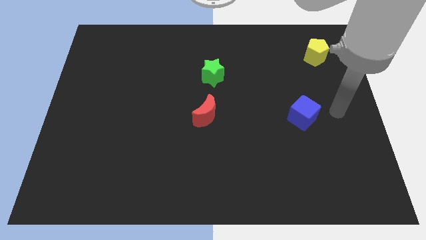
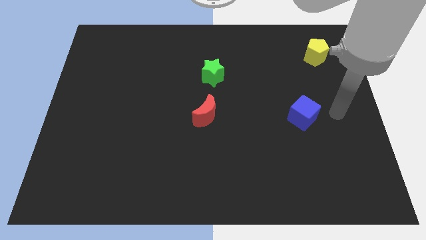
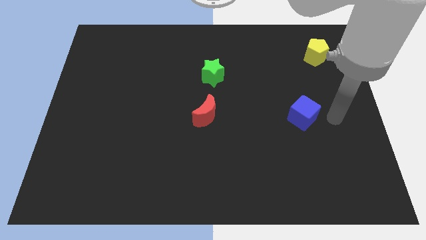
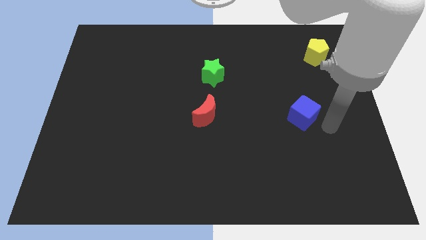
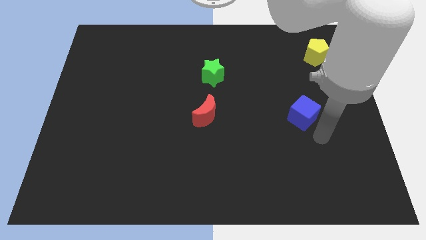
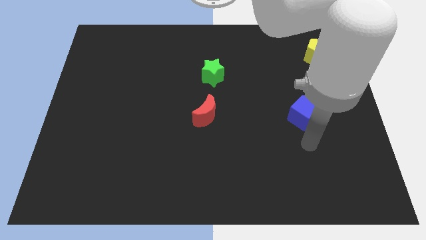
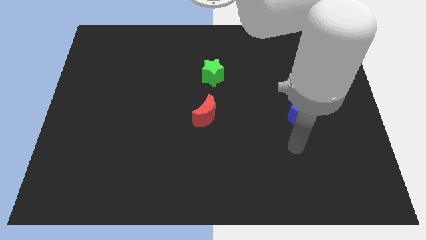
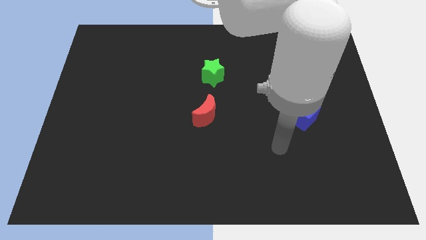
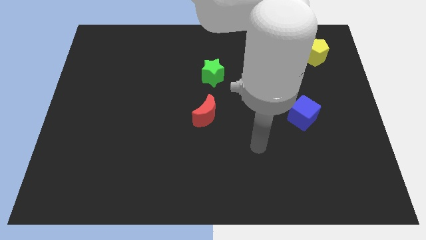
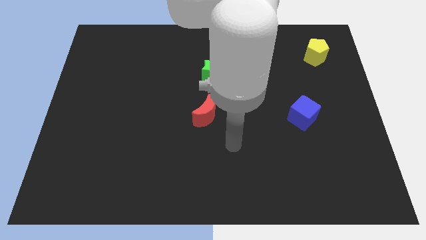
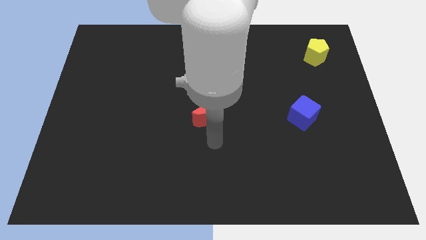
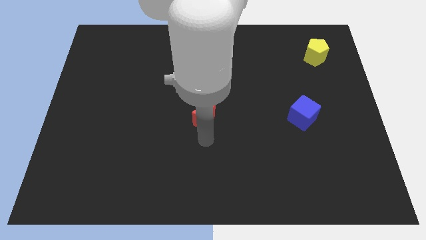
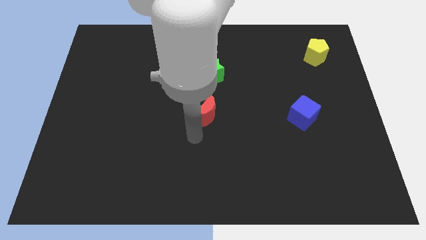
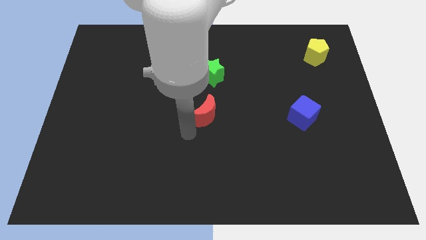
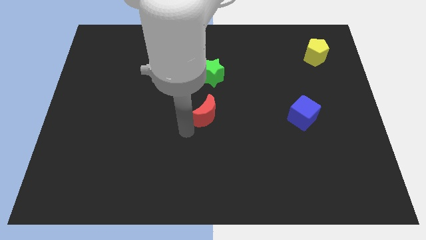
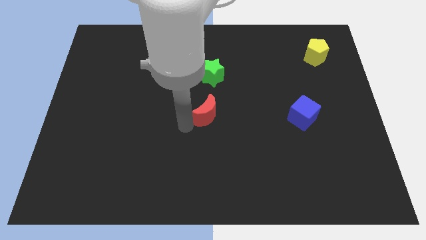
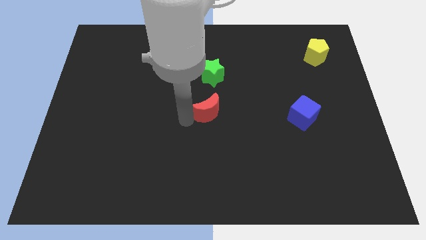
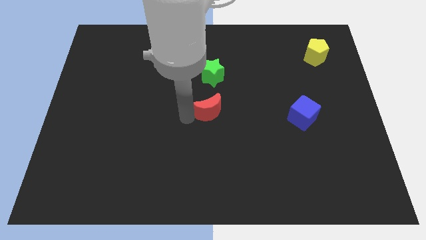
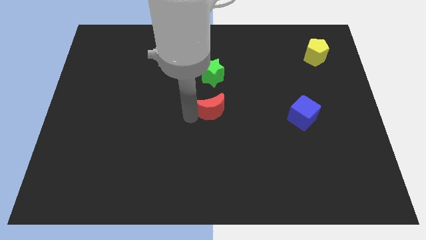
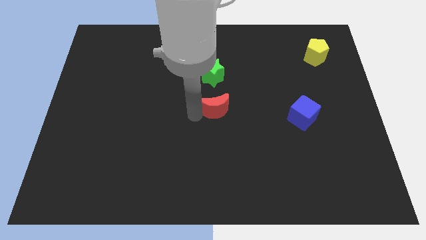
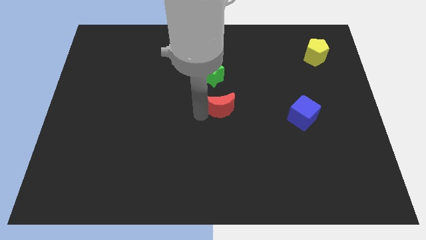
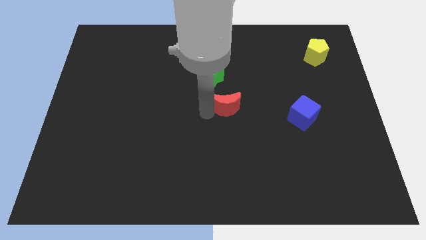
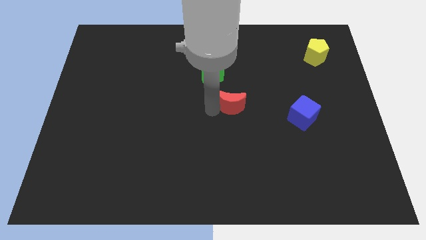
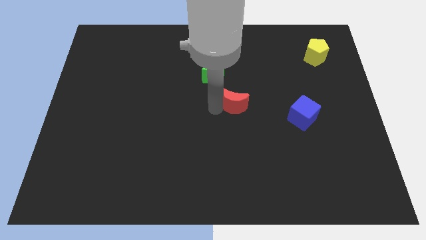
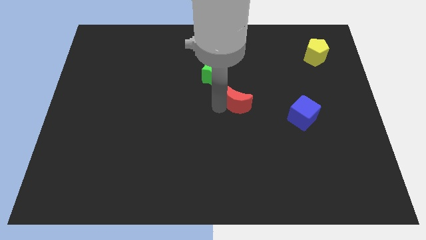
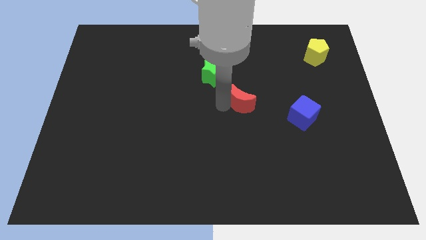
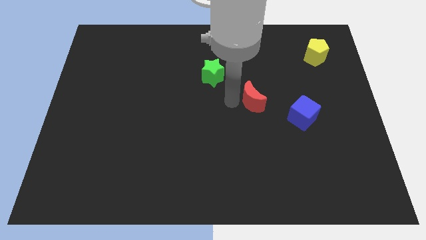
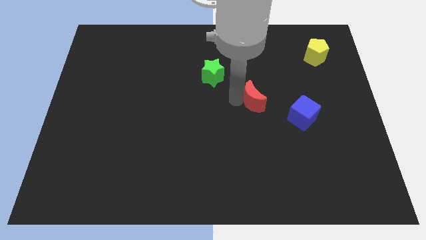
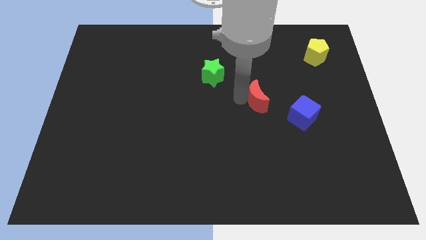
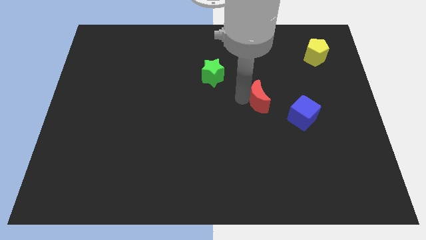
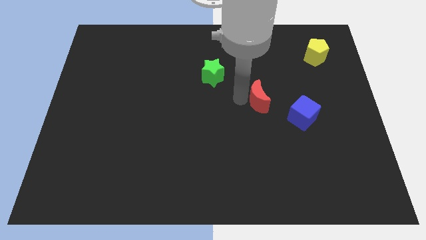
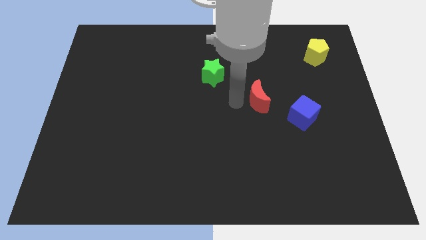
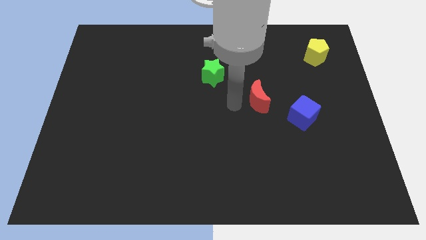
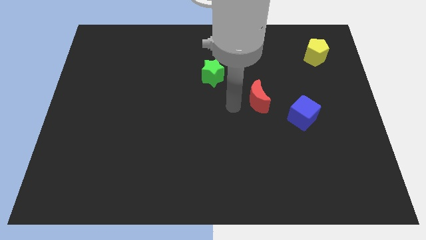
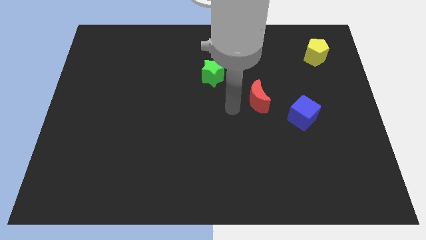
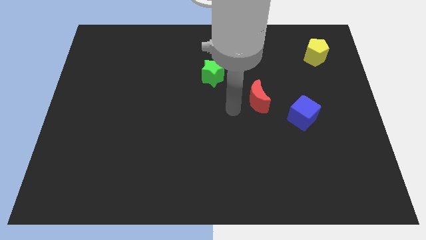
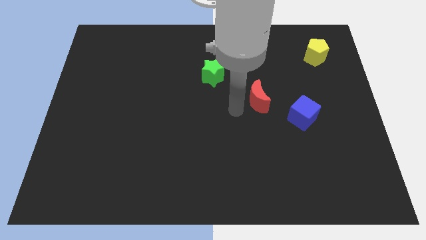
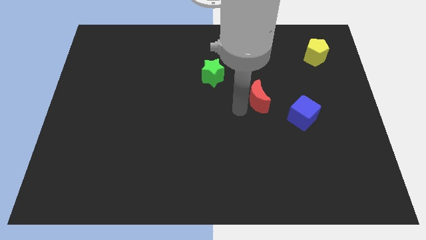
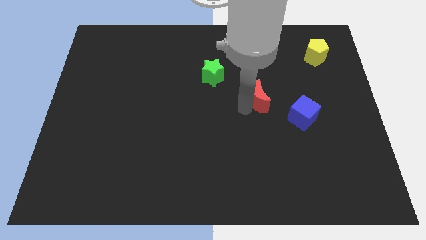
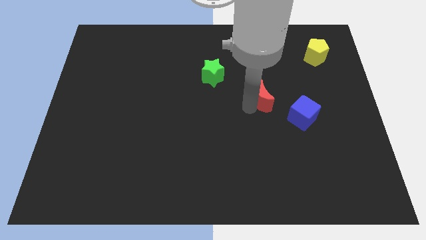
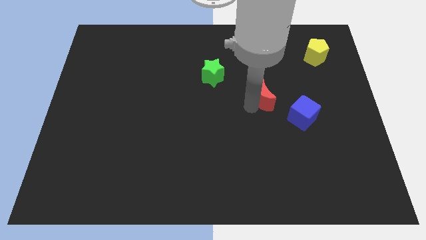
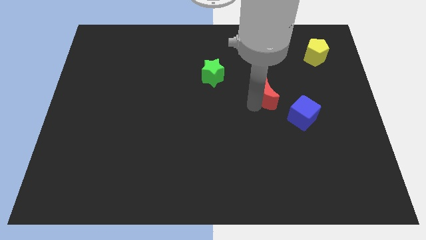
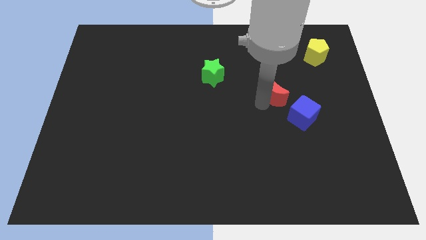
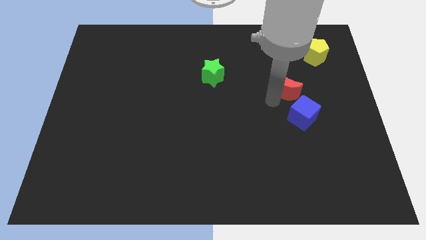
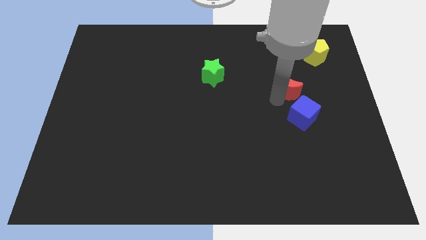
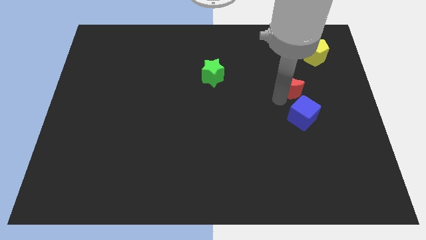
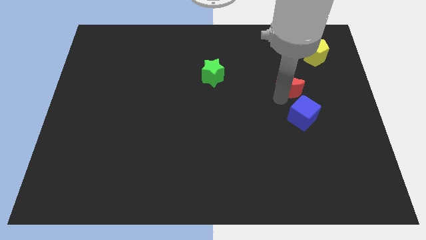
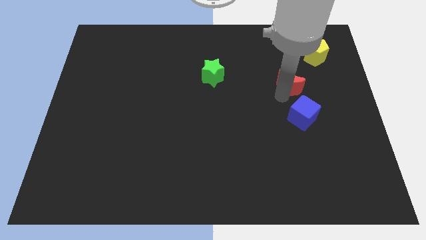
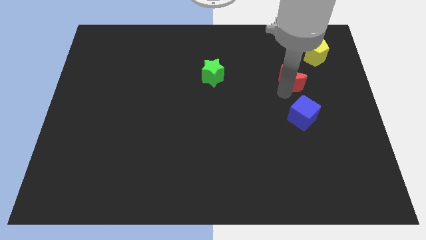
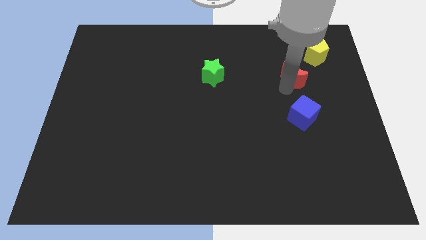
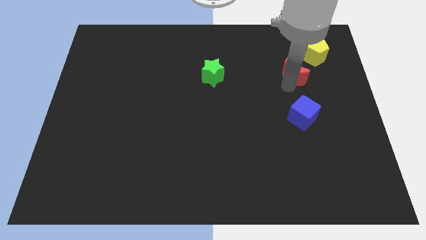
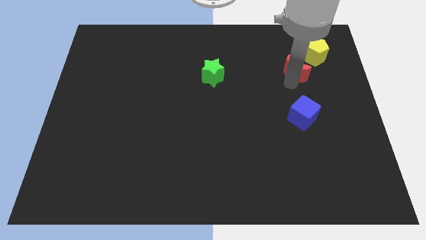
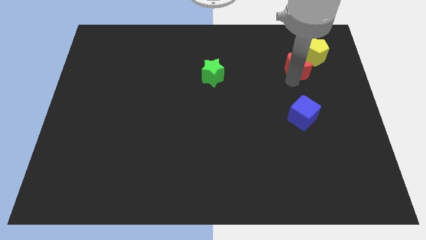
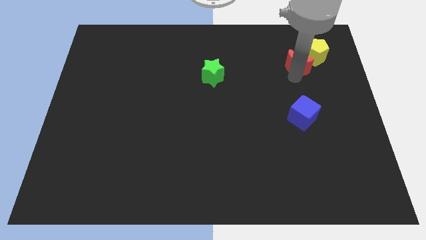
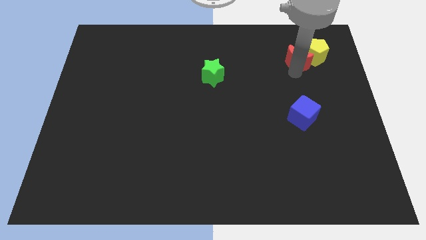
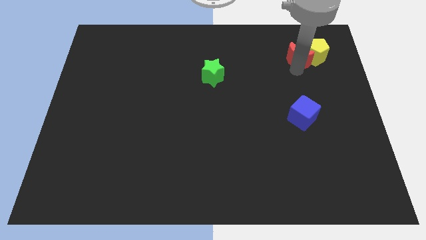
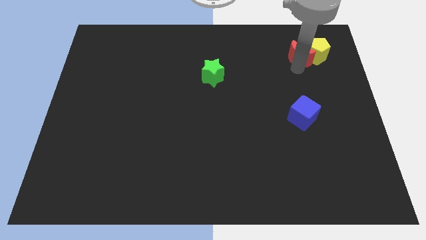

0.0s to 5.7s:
move the red block to the pentagon

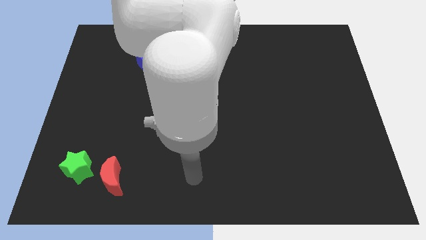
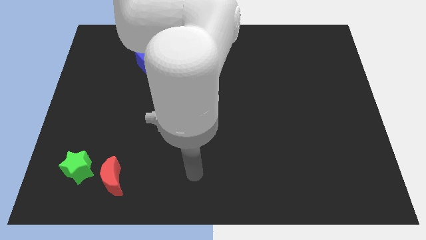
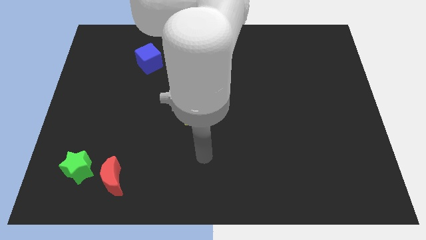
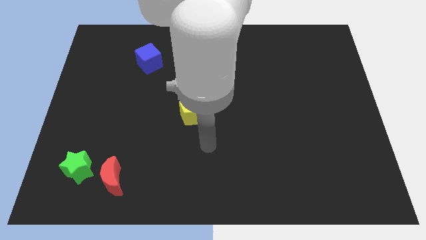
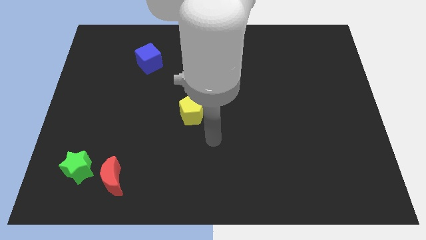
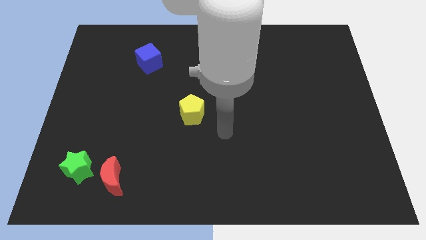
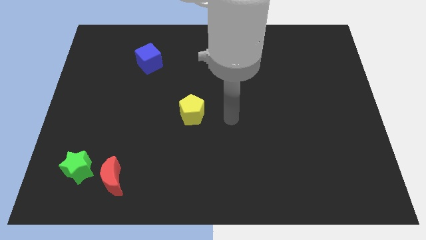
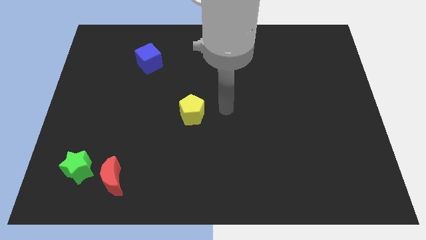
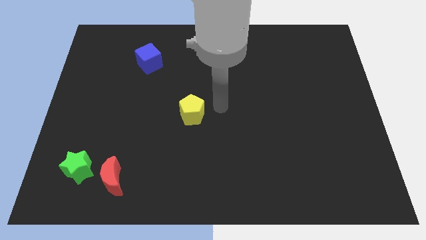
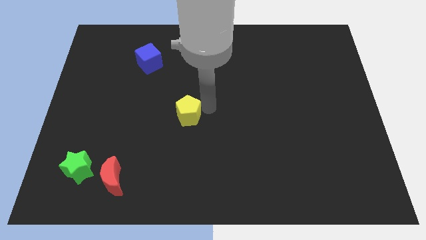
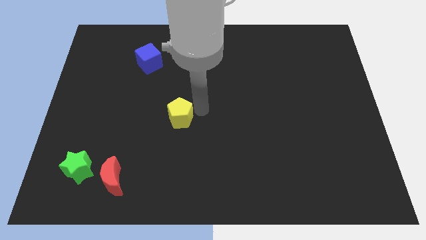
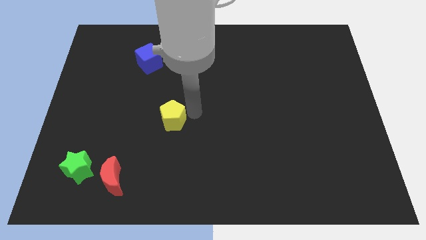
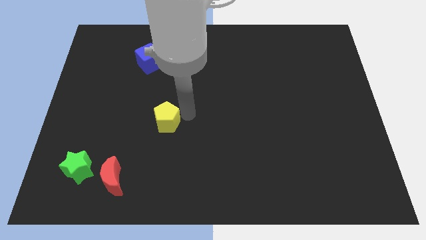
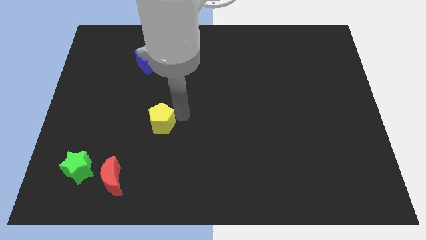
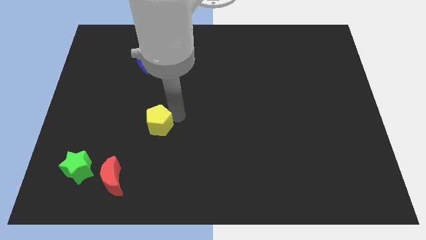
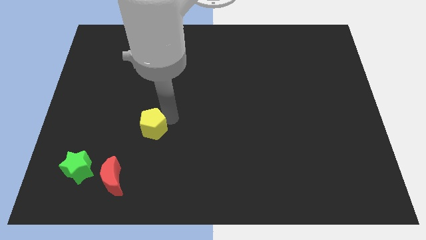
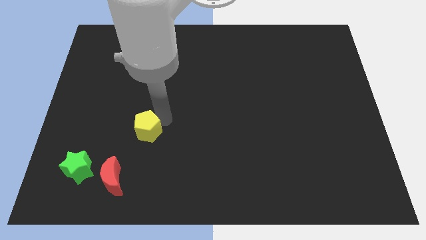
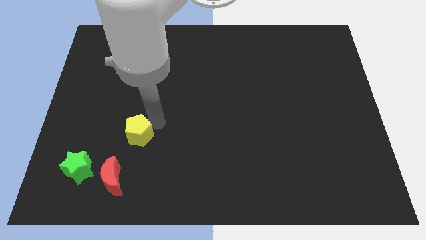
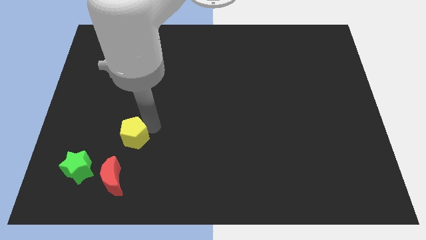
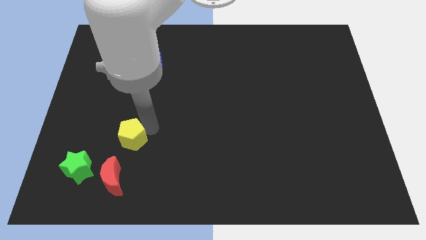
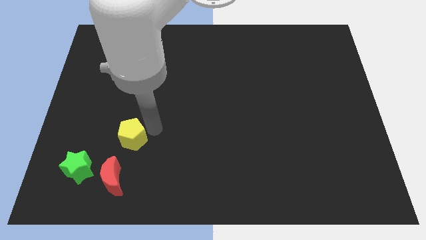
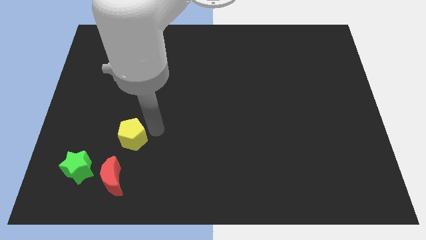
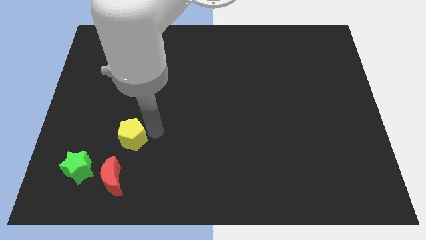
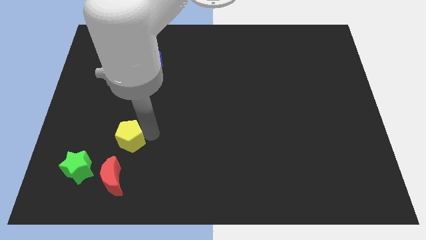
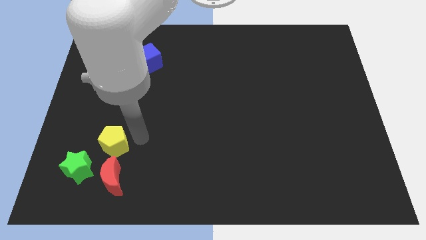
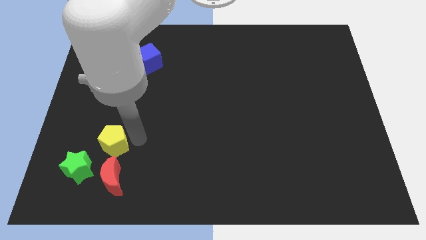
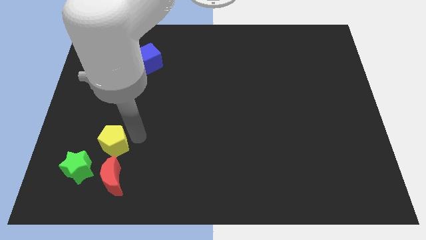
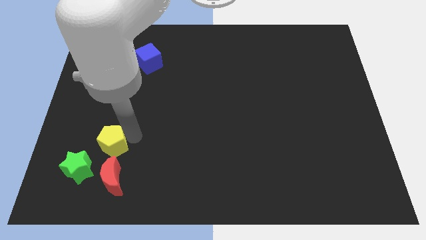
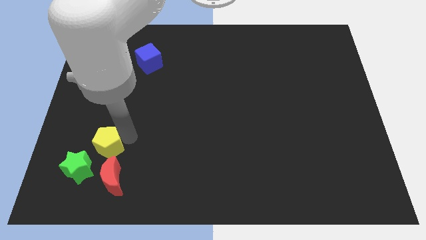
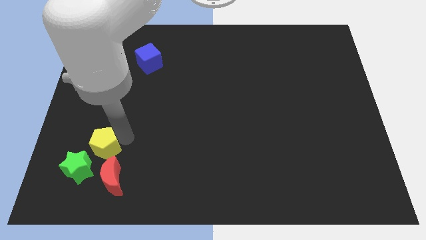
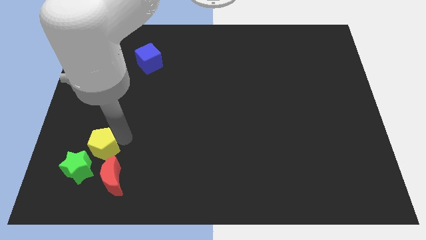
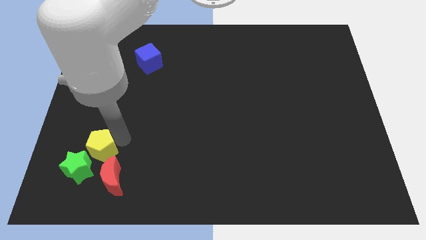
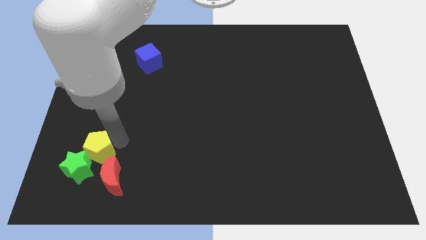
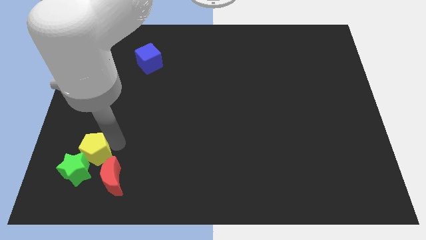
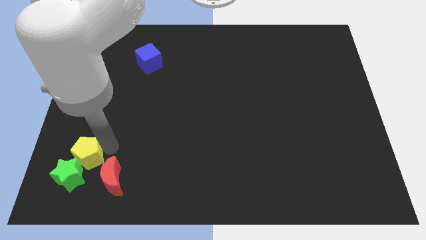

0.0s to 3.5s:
push the yellow pentagon to the star
